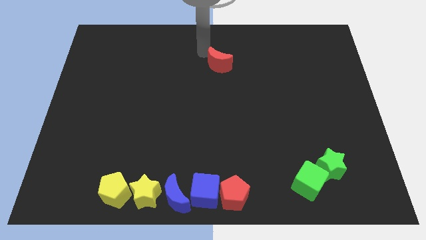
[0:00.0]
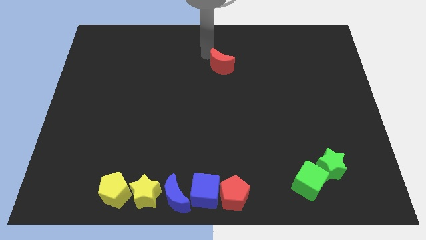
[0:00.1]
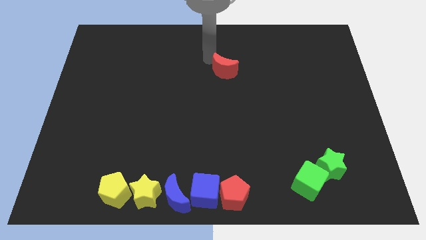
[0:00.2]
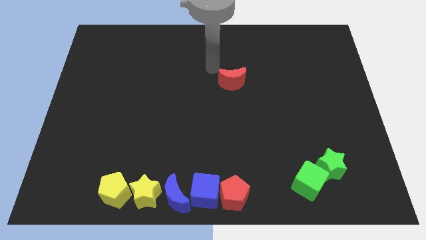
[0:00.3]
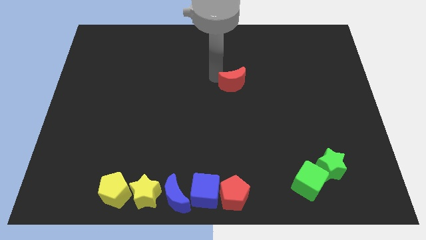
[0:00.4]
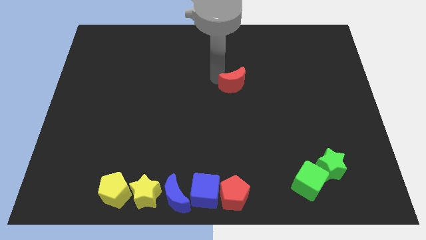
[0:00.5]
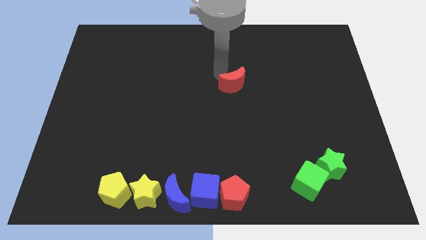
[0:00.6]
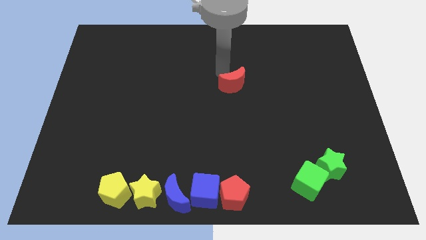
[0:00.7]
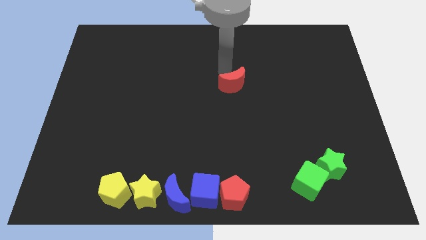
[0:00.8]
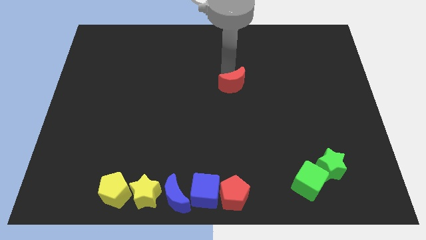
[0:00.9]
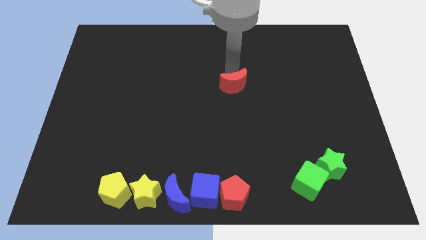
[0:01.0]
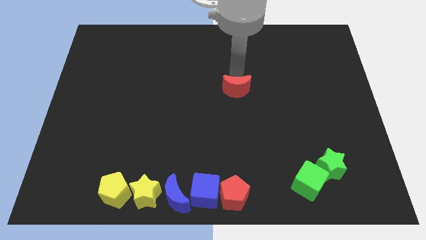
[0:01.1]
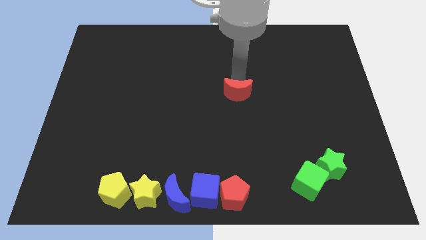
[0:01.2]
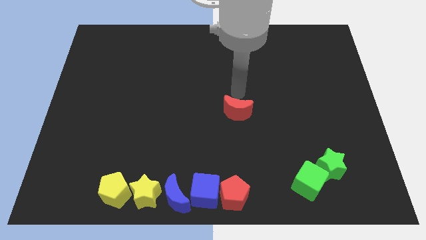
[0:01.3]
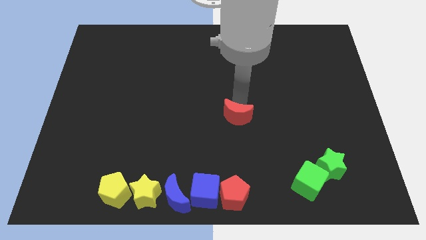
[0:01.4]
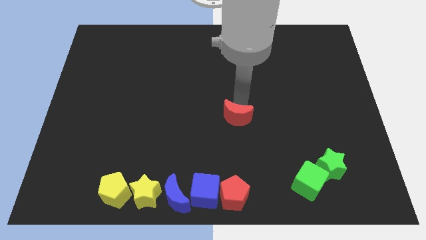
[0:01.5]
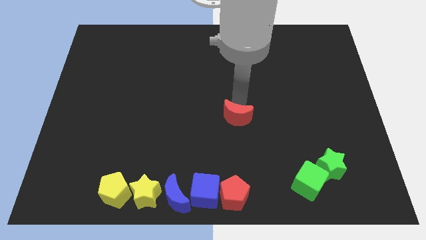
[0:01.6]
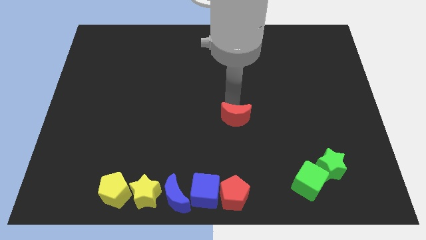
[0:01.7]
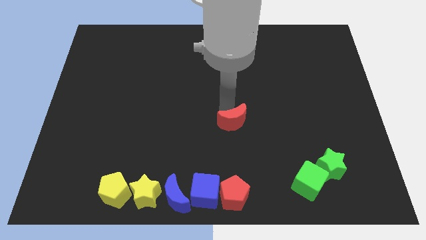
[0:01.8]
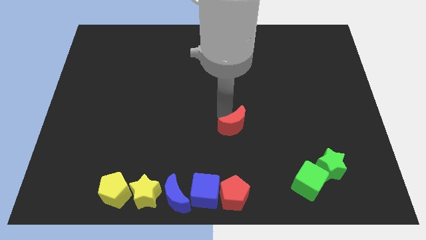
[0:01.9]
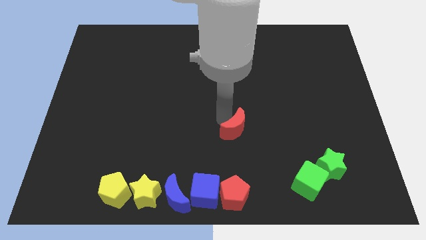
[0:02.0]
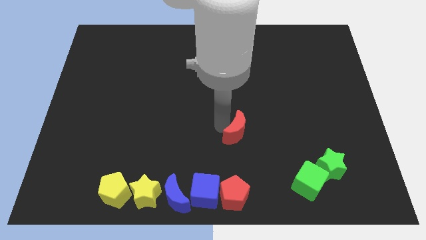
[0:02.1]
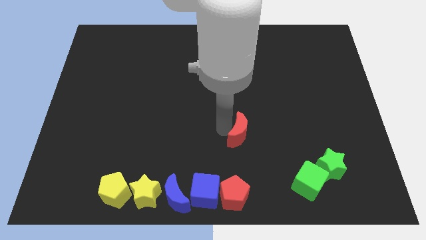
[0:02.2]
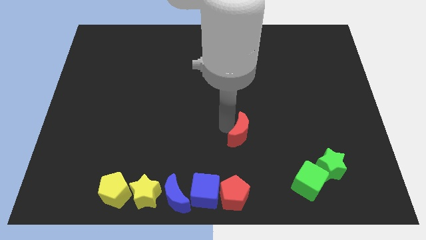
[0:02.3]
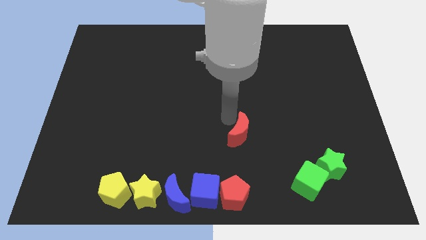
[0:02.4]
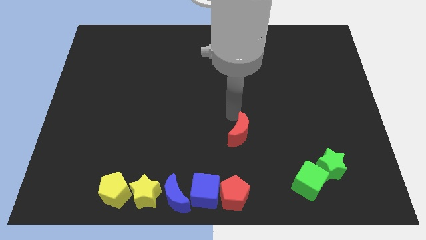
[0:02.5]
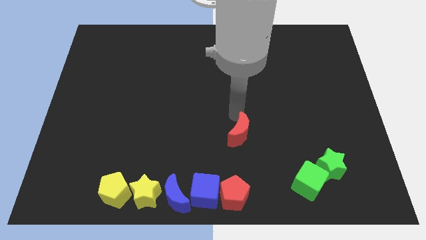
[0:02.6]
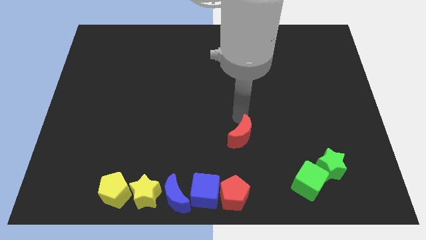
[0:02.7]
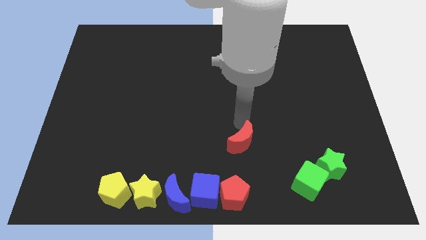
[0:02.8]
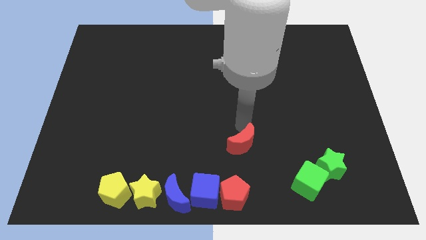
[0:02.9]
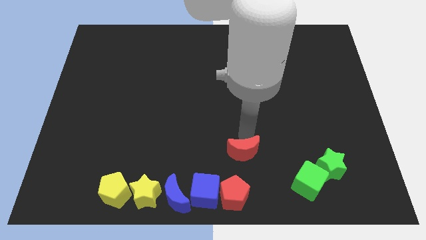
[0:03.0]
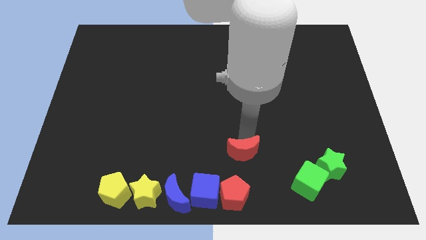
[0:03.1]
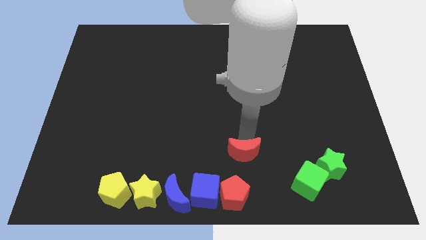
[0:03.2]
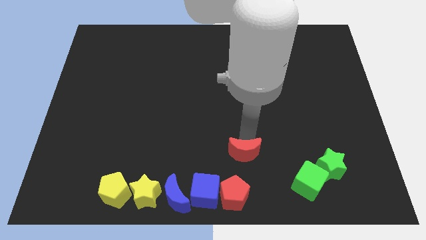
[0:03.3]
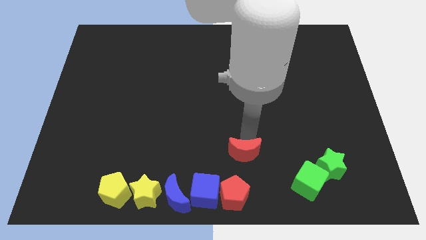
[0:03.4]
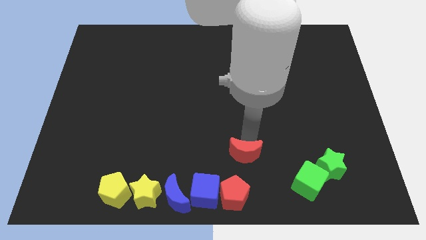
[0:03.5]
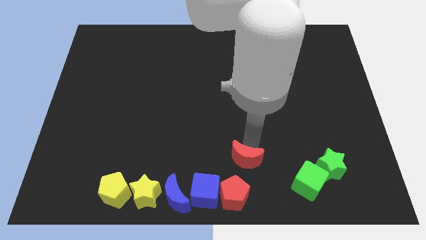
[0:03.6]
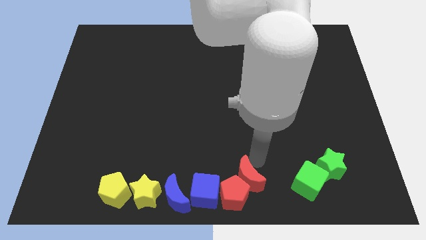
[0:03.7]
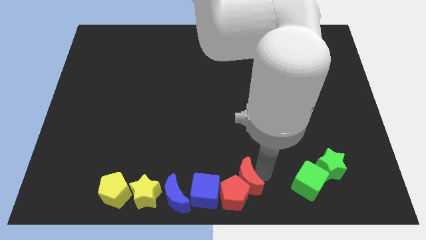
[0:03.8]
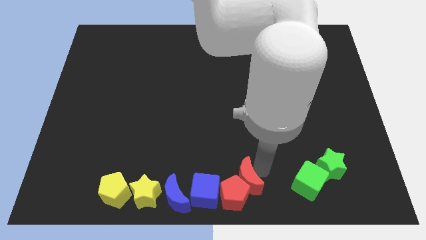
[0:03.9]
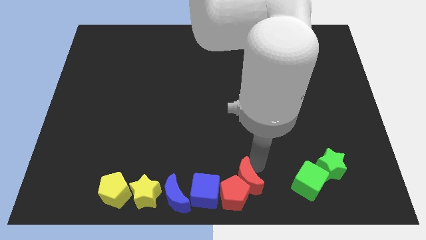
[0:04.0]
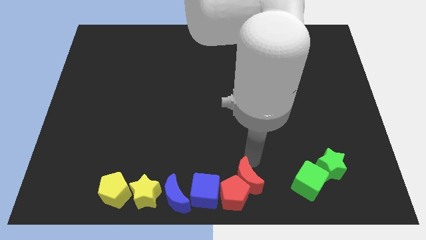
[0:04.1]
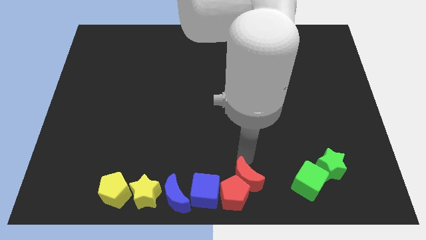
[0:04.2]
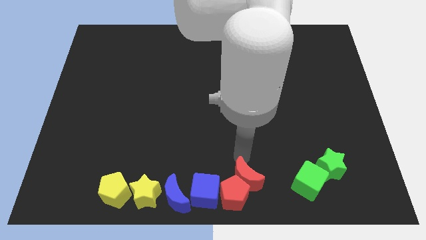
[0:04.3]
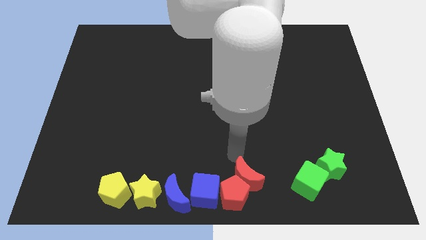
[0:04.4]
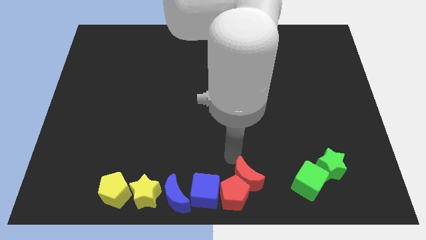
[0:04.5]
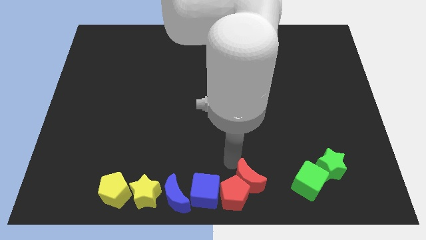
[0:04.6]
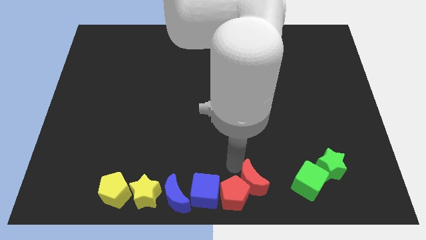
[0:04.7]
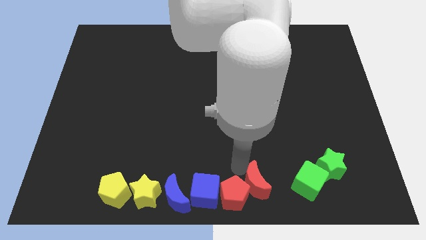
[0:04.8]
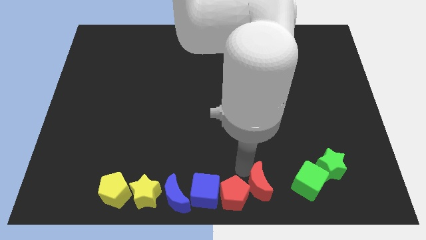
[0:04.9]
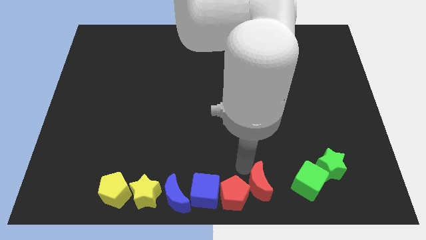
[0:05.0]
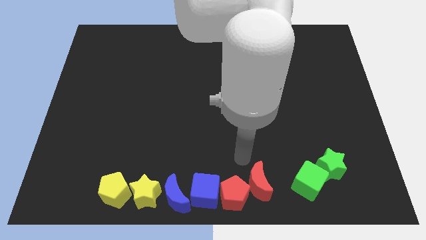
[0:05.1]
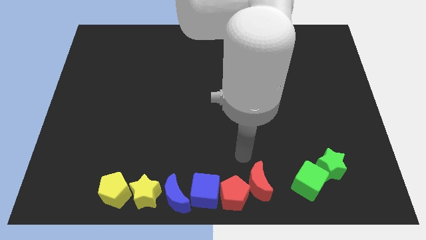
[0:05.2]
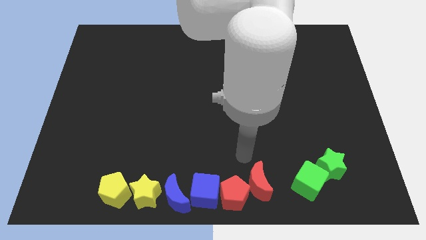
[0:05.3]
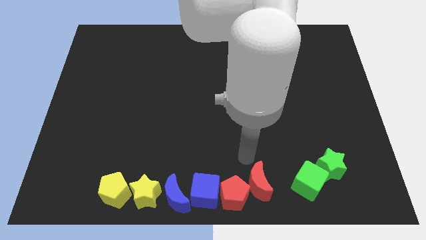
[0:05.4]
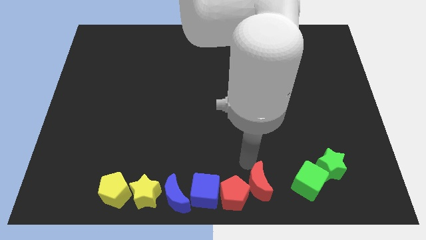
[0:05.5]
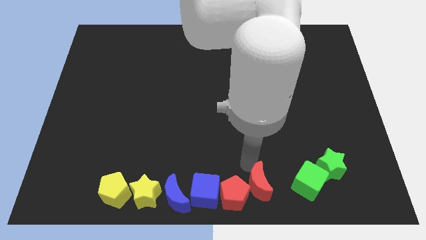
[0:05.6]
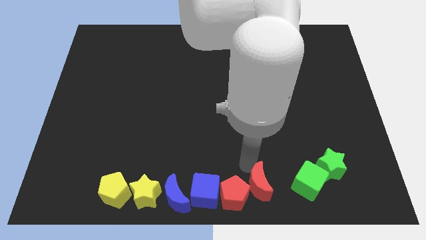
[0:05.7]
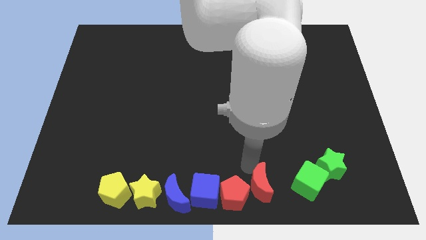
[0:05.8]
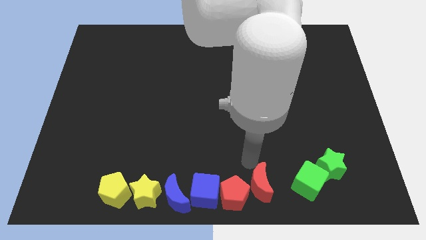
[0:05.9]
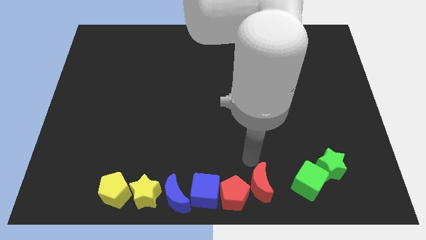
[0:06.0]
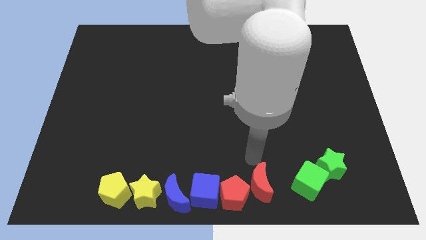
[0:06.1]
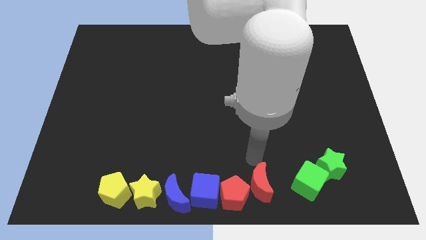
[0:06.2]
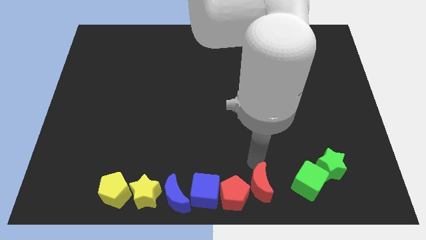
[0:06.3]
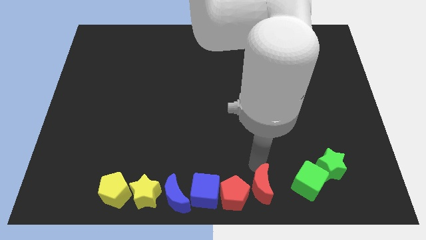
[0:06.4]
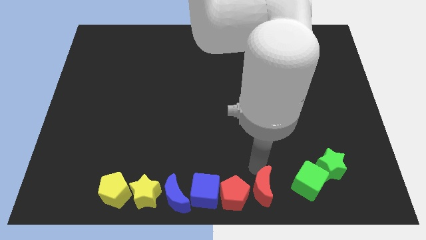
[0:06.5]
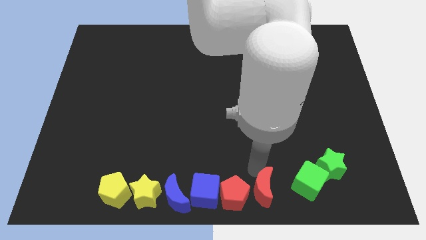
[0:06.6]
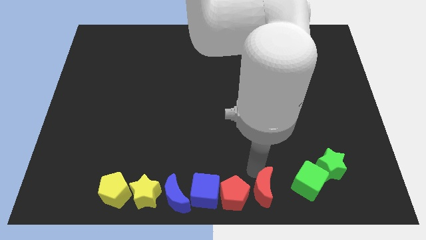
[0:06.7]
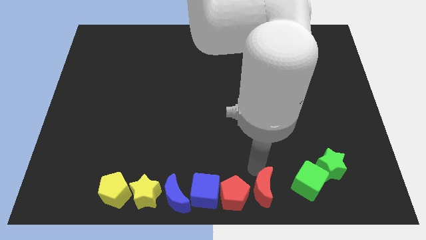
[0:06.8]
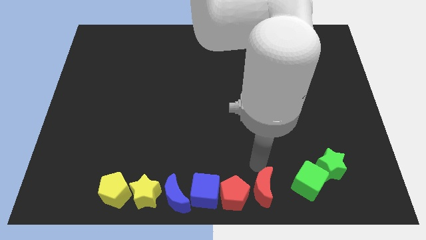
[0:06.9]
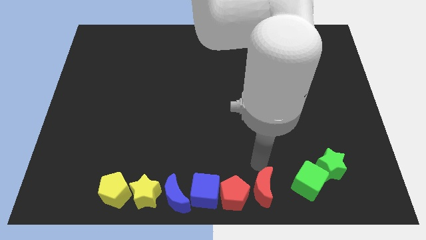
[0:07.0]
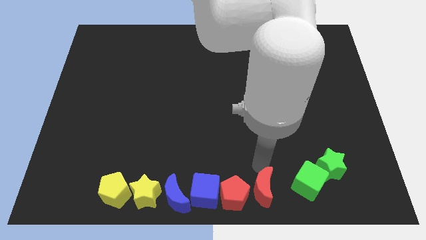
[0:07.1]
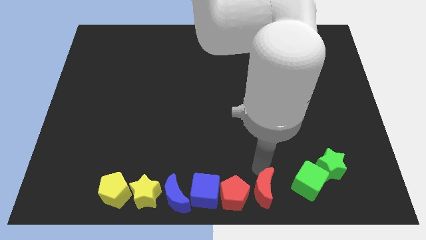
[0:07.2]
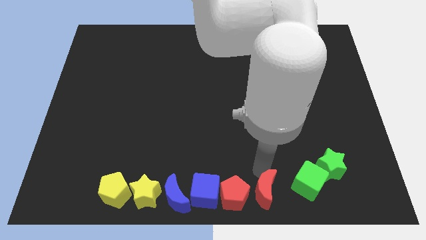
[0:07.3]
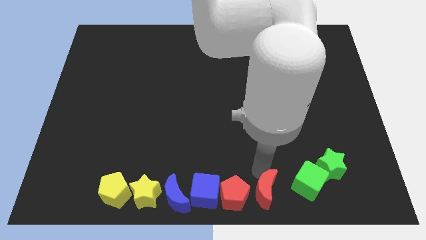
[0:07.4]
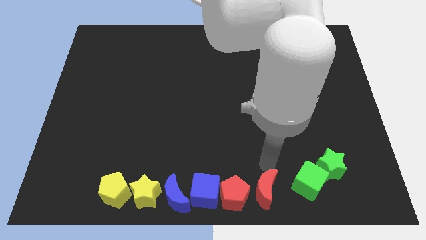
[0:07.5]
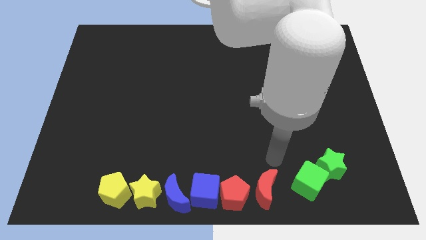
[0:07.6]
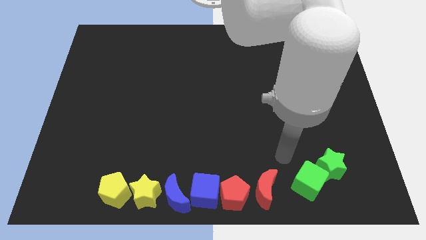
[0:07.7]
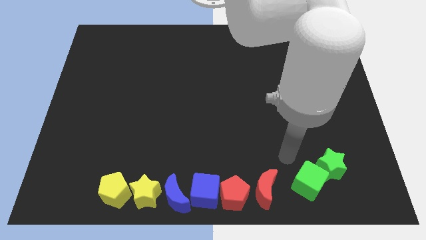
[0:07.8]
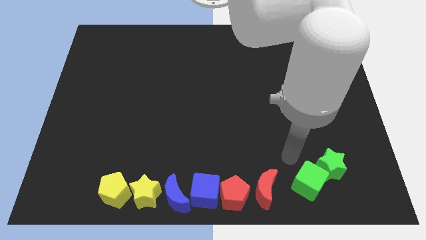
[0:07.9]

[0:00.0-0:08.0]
place the red crescent to the right of the red pentagon

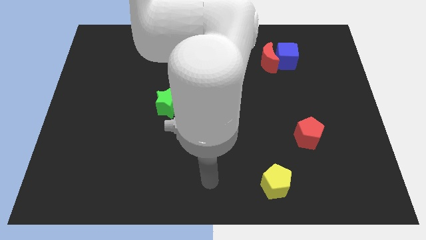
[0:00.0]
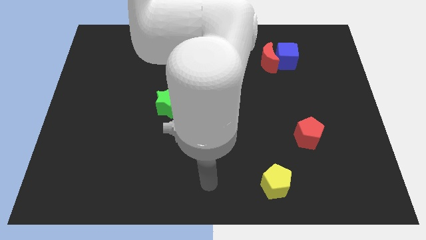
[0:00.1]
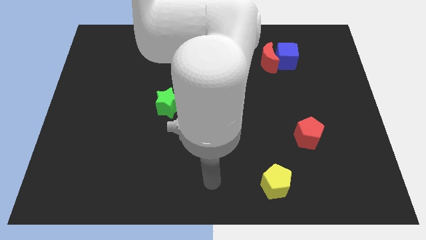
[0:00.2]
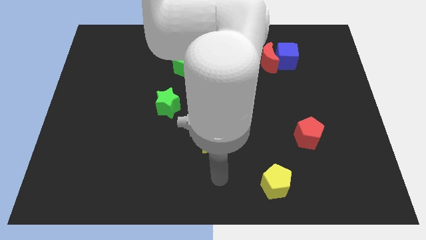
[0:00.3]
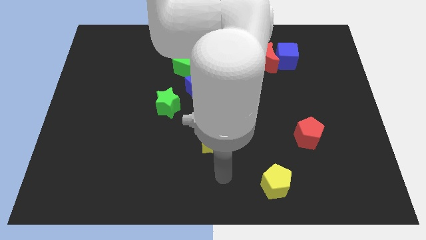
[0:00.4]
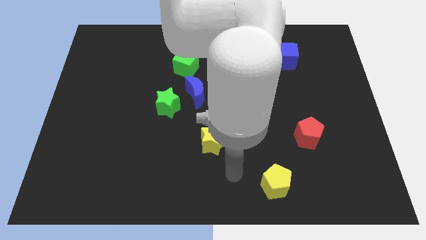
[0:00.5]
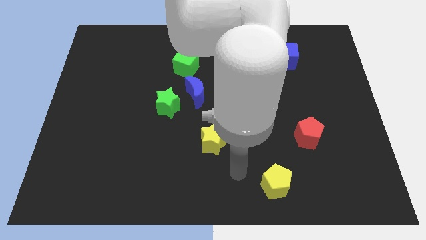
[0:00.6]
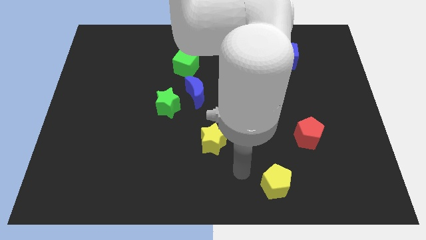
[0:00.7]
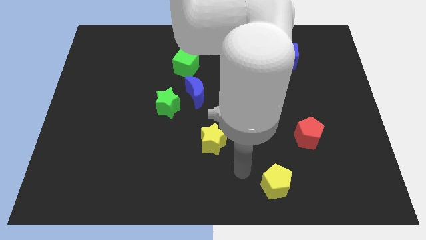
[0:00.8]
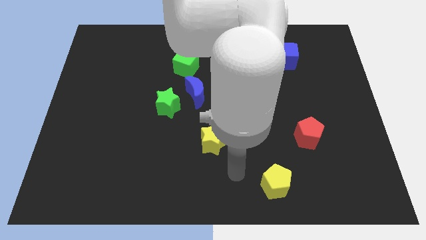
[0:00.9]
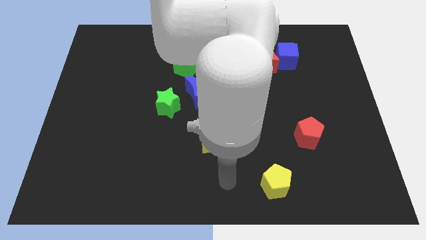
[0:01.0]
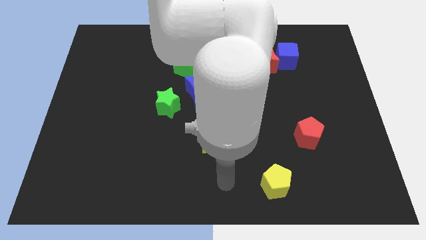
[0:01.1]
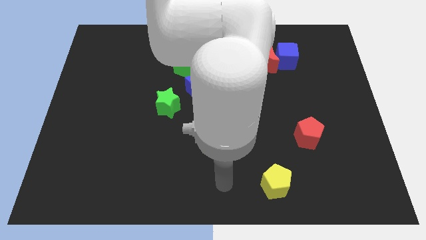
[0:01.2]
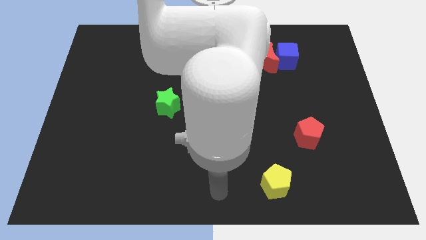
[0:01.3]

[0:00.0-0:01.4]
point your arm at the bottom center of the board
